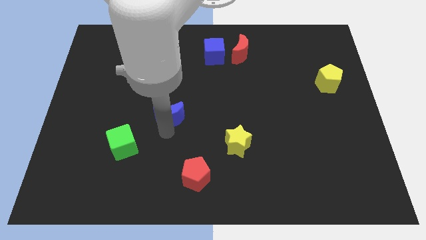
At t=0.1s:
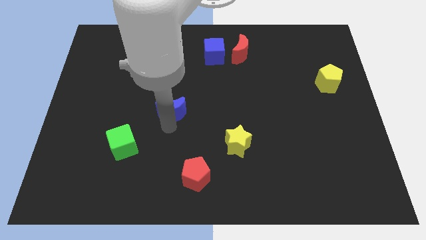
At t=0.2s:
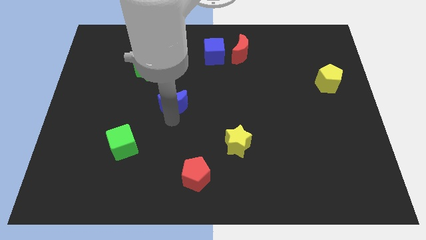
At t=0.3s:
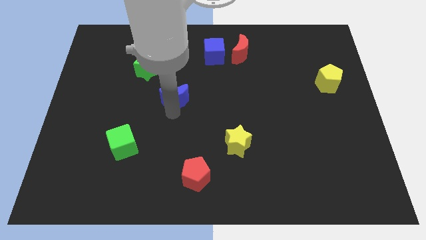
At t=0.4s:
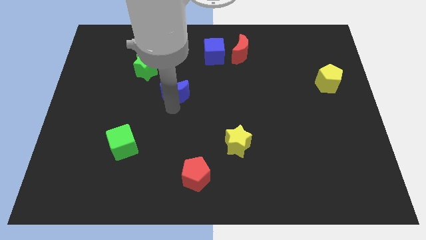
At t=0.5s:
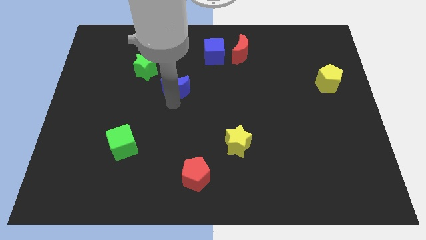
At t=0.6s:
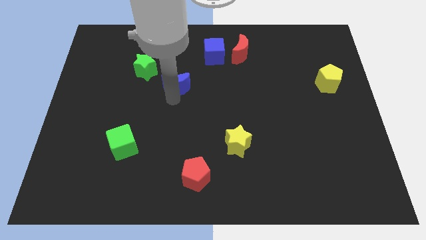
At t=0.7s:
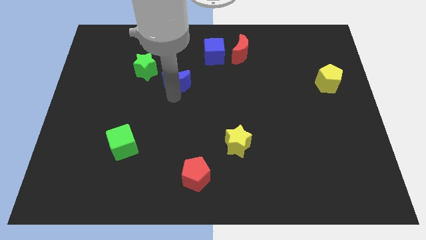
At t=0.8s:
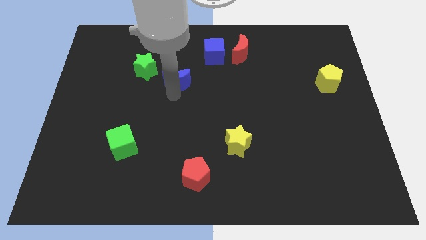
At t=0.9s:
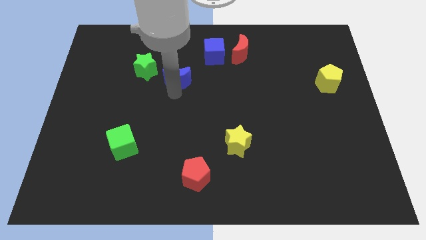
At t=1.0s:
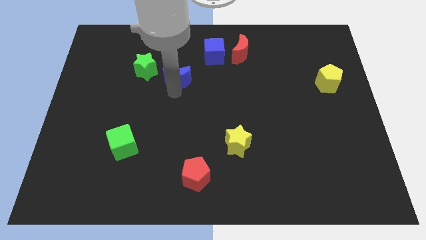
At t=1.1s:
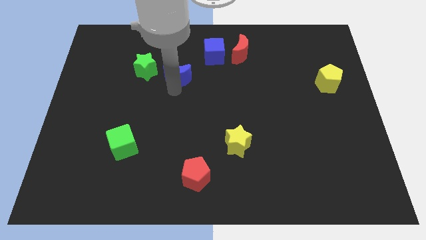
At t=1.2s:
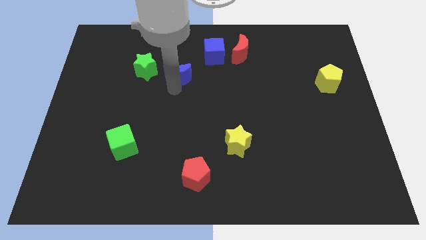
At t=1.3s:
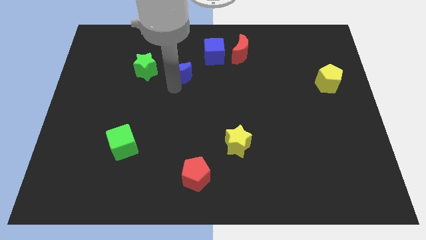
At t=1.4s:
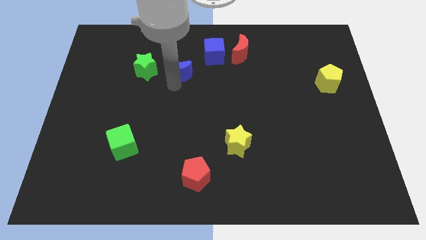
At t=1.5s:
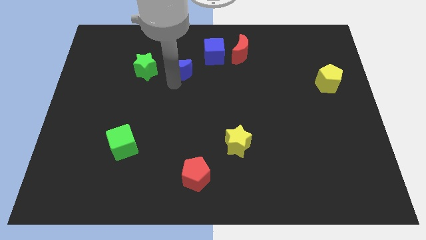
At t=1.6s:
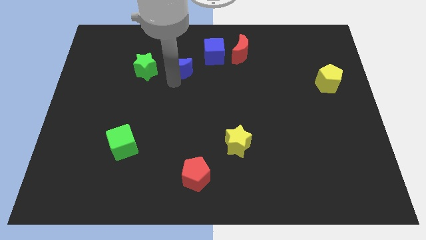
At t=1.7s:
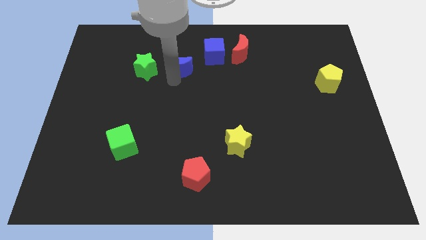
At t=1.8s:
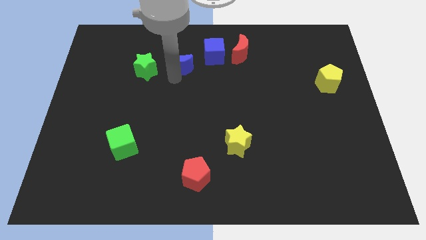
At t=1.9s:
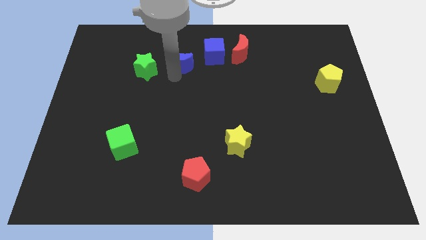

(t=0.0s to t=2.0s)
place the blue moon right to the green star

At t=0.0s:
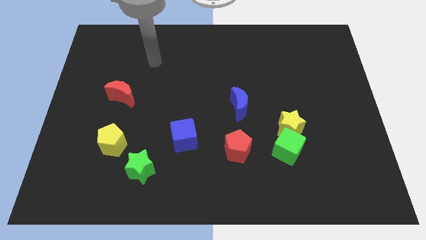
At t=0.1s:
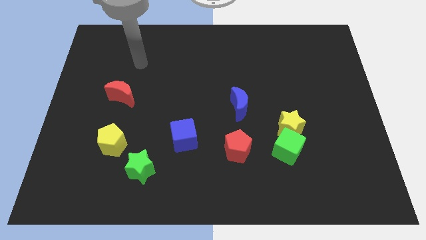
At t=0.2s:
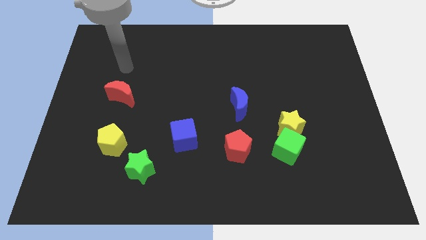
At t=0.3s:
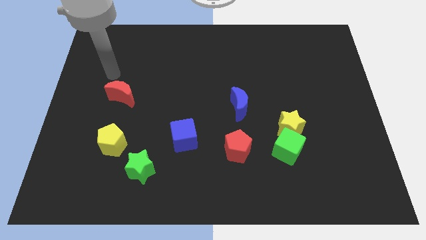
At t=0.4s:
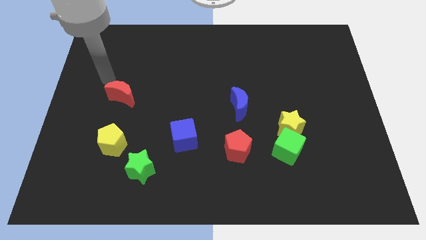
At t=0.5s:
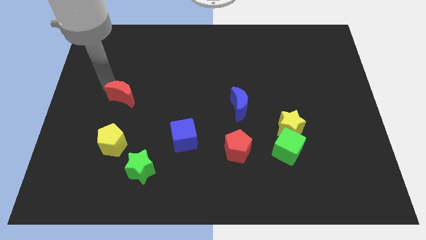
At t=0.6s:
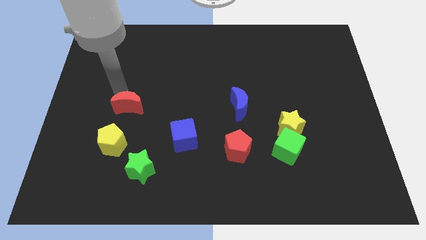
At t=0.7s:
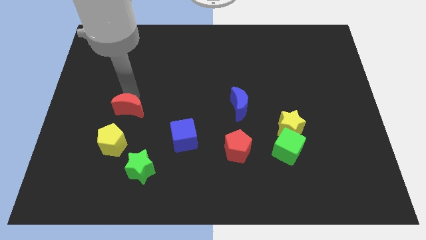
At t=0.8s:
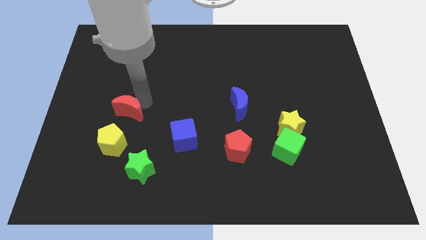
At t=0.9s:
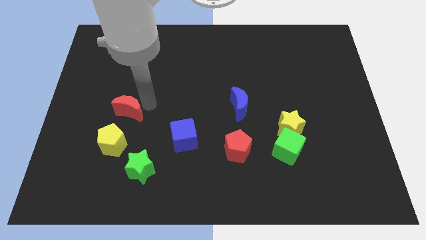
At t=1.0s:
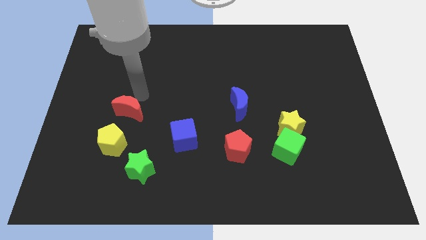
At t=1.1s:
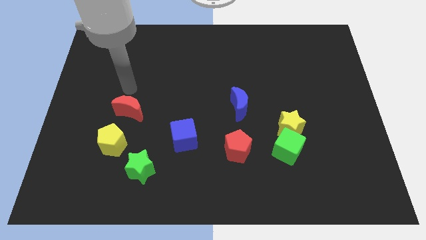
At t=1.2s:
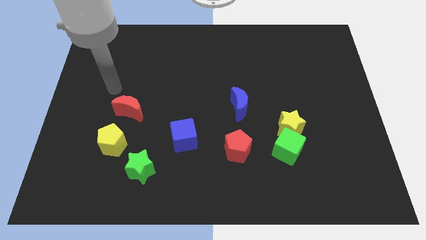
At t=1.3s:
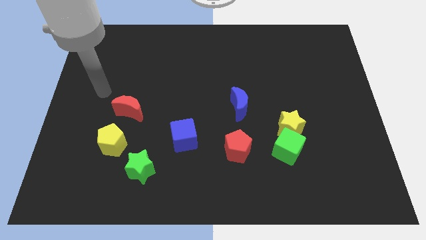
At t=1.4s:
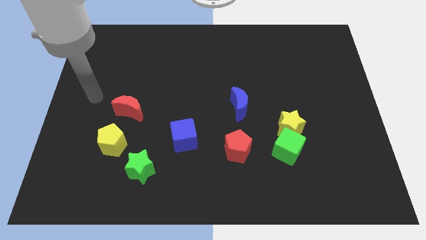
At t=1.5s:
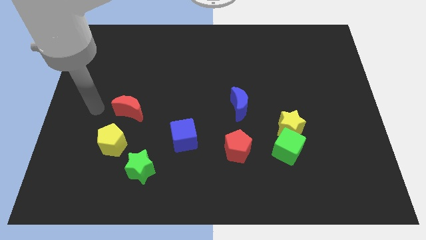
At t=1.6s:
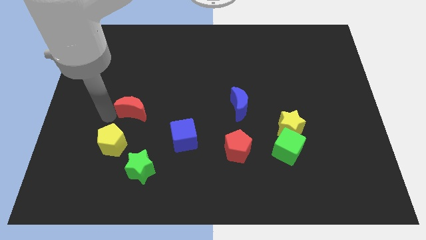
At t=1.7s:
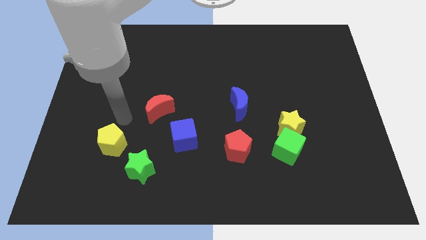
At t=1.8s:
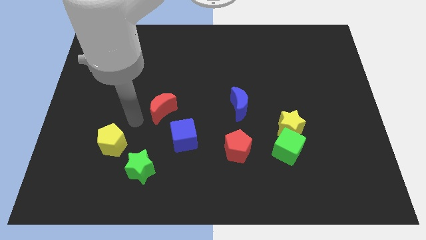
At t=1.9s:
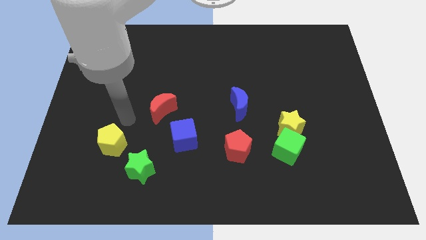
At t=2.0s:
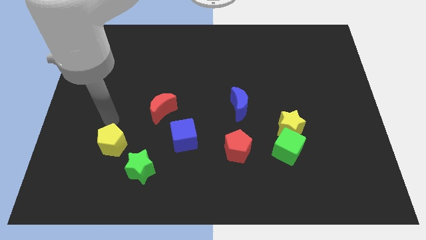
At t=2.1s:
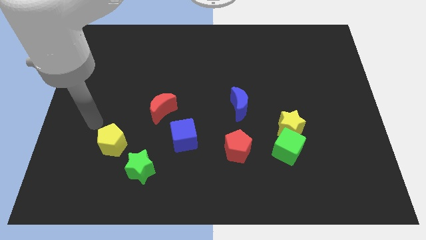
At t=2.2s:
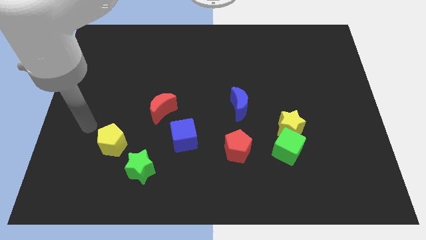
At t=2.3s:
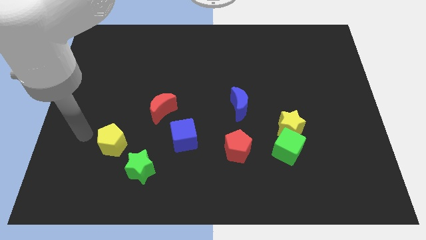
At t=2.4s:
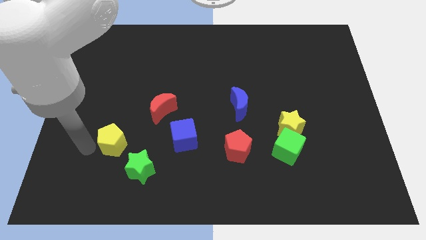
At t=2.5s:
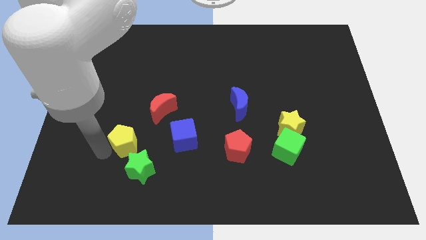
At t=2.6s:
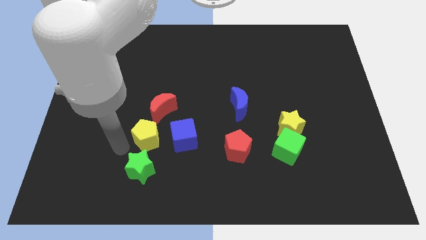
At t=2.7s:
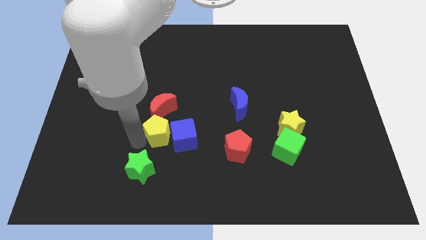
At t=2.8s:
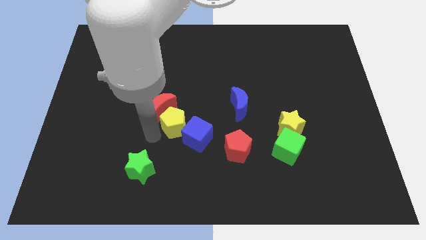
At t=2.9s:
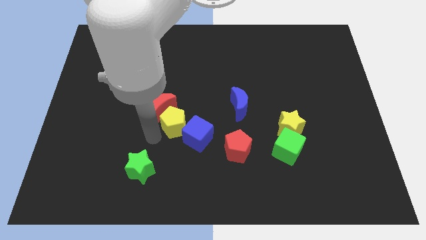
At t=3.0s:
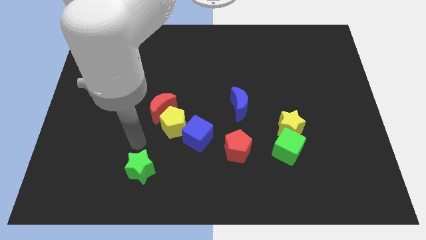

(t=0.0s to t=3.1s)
slide the red moon and yellow pentagon to the left side of the blue cube

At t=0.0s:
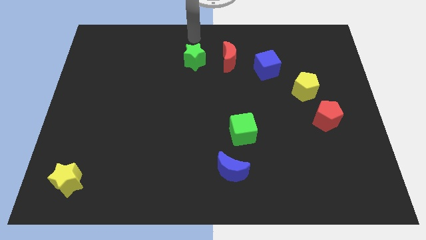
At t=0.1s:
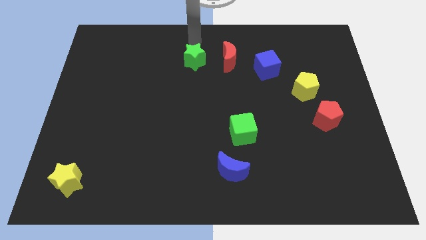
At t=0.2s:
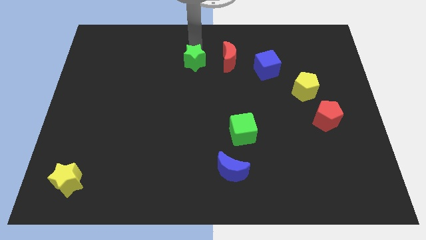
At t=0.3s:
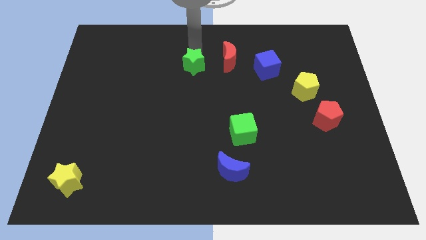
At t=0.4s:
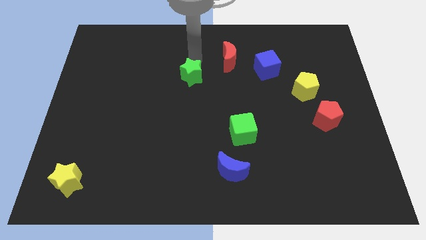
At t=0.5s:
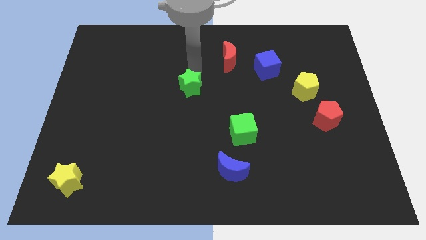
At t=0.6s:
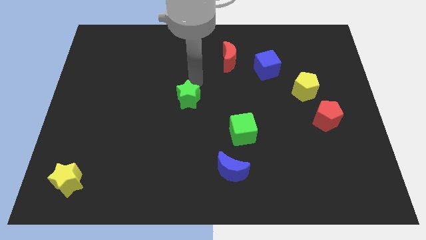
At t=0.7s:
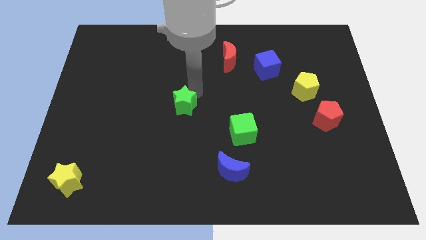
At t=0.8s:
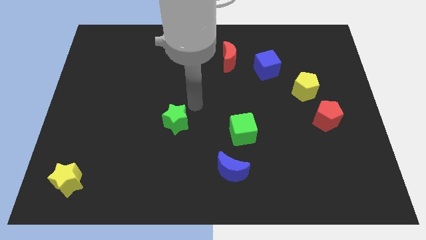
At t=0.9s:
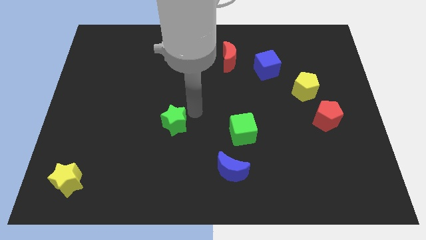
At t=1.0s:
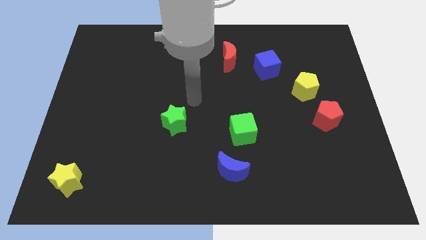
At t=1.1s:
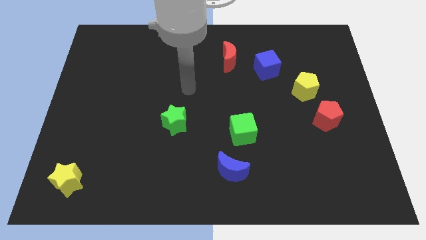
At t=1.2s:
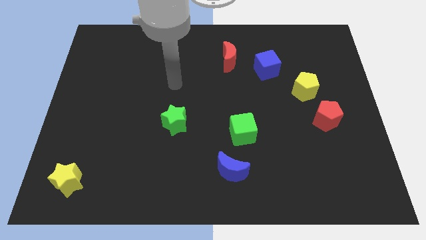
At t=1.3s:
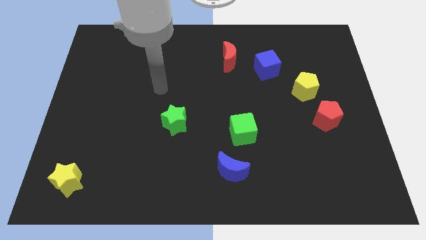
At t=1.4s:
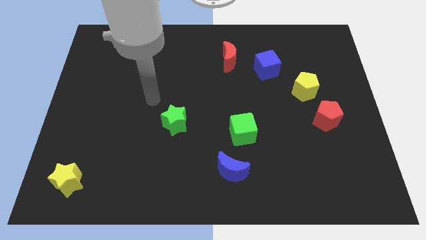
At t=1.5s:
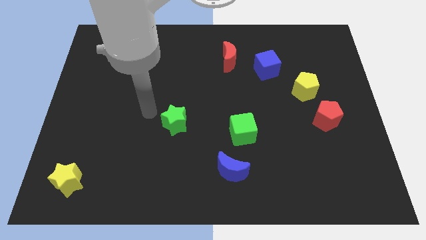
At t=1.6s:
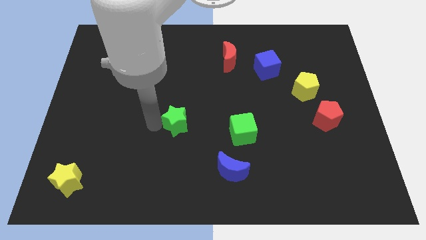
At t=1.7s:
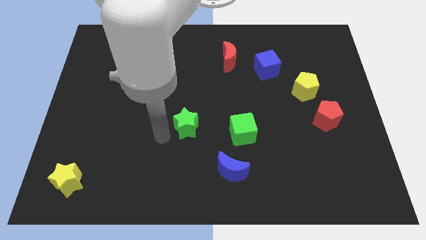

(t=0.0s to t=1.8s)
place green star to the left of the green cube

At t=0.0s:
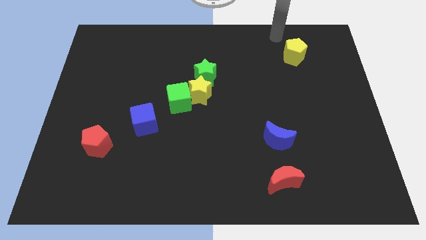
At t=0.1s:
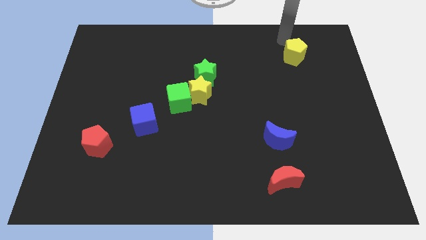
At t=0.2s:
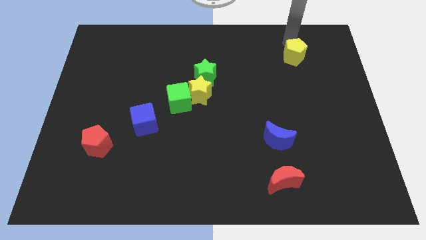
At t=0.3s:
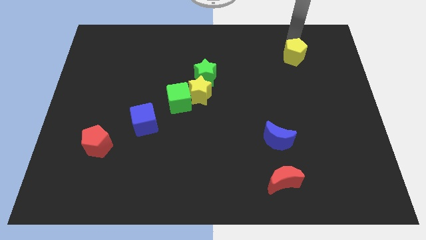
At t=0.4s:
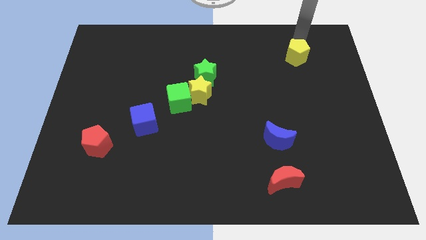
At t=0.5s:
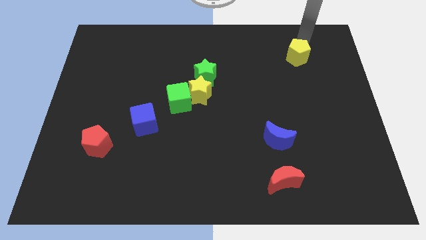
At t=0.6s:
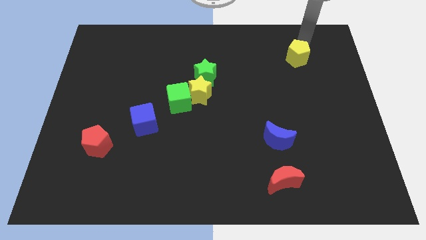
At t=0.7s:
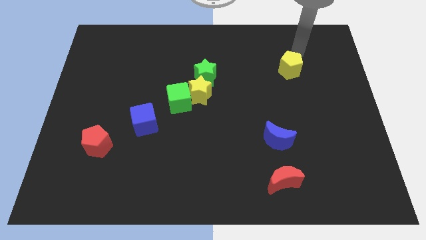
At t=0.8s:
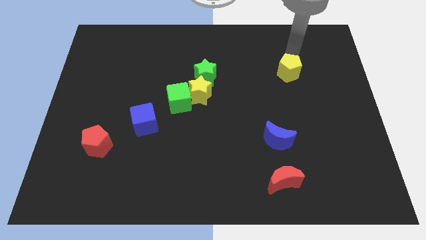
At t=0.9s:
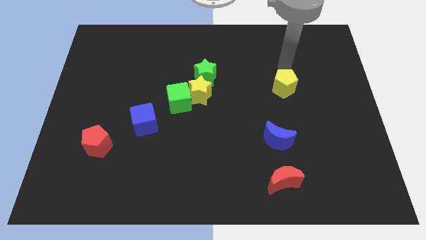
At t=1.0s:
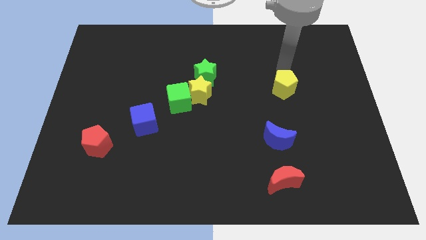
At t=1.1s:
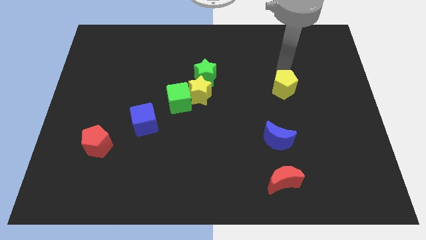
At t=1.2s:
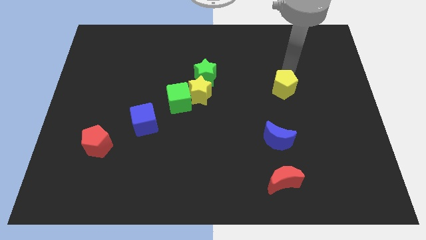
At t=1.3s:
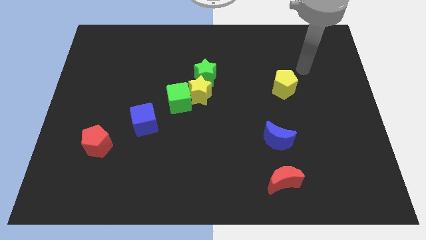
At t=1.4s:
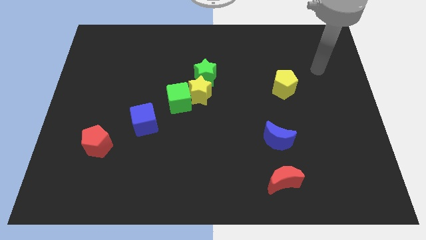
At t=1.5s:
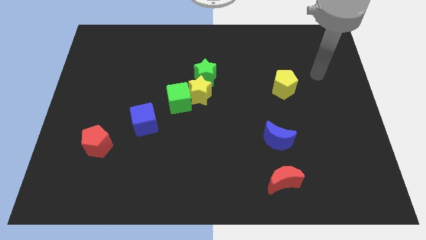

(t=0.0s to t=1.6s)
push the yellow pentagon towards the blue moon

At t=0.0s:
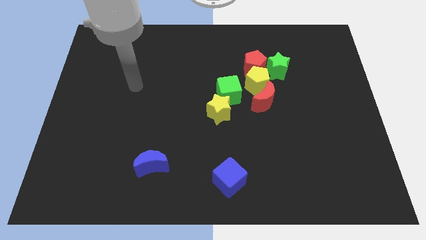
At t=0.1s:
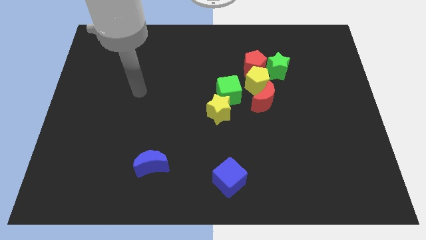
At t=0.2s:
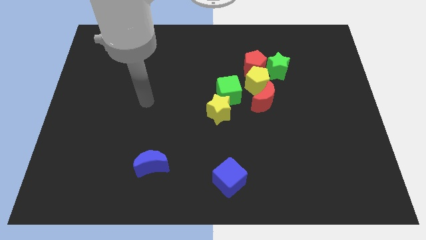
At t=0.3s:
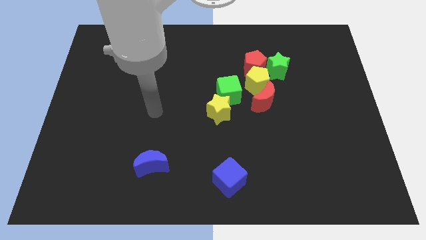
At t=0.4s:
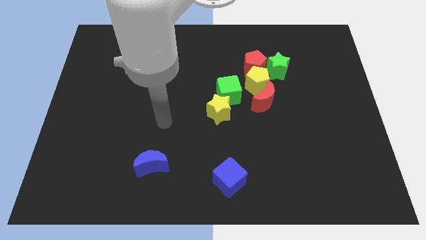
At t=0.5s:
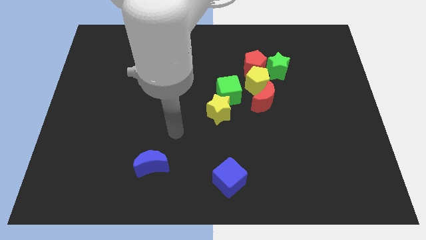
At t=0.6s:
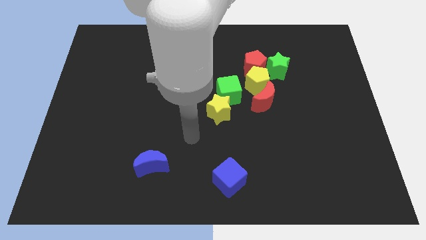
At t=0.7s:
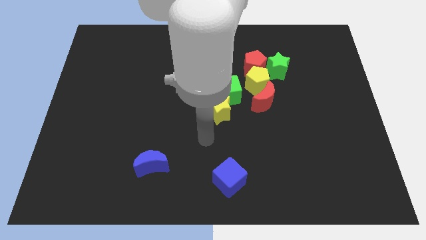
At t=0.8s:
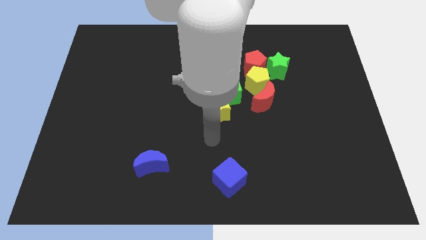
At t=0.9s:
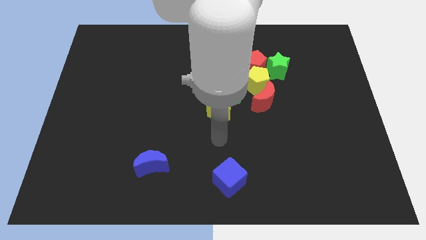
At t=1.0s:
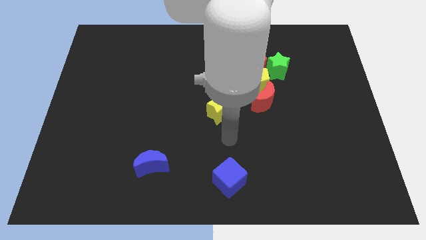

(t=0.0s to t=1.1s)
move the arm to the top of the blue cube
